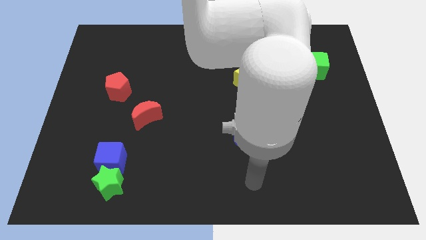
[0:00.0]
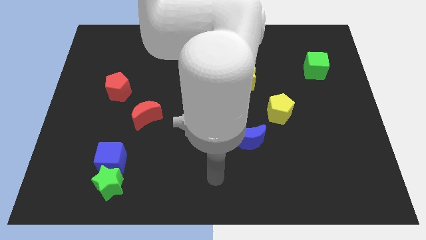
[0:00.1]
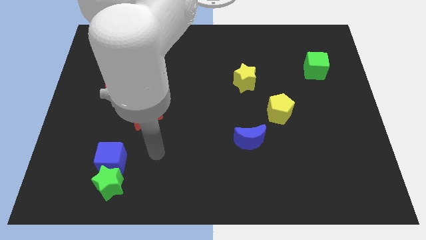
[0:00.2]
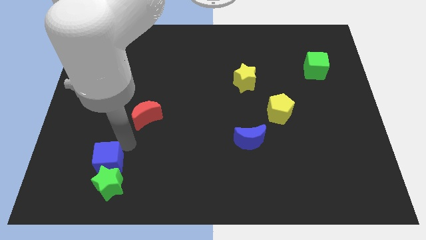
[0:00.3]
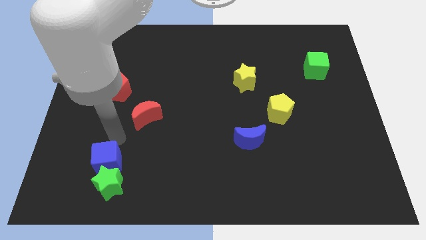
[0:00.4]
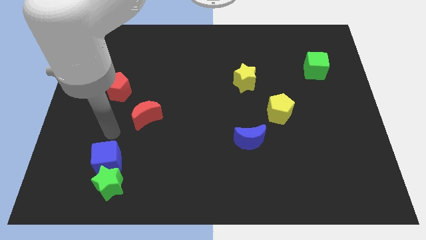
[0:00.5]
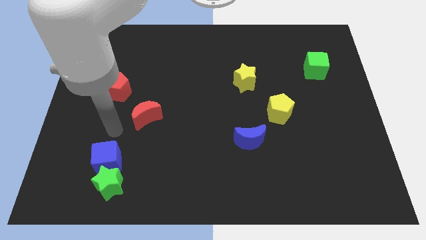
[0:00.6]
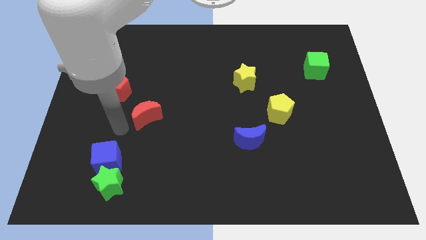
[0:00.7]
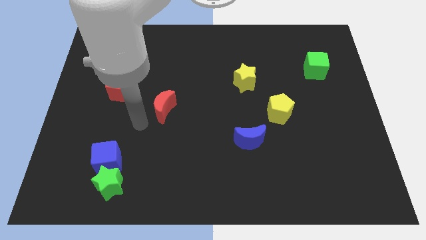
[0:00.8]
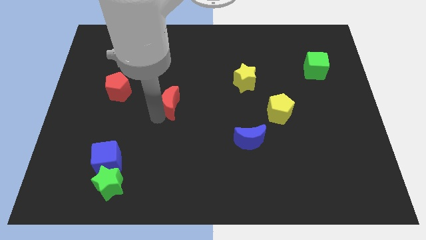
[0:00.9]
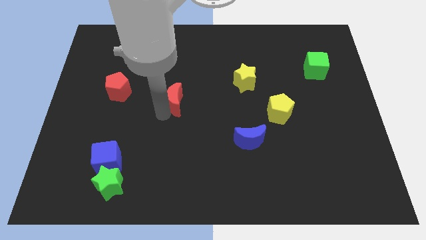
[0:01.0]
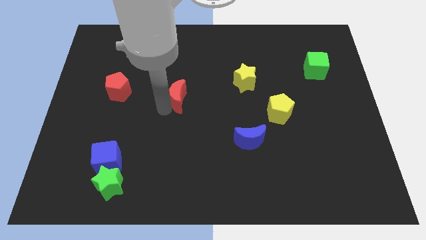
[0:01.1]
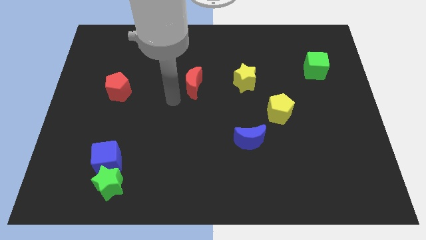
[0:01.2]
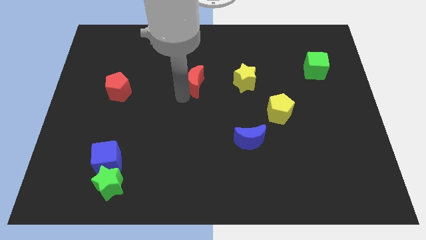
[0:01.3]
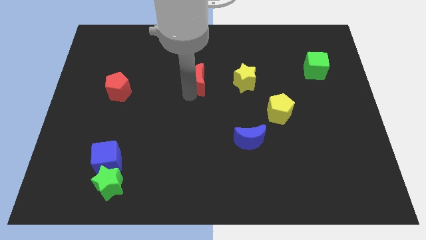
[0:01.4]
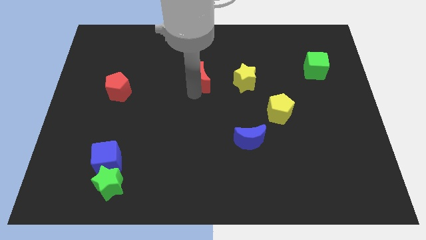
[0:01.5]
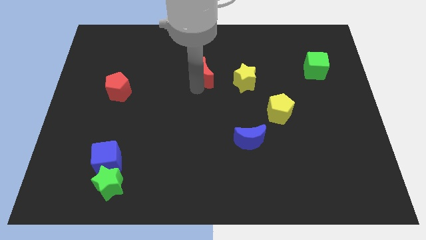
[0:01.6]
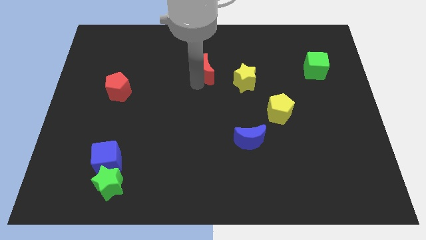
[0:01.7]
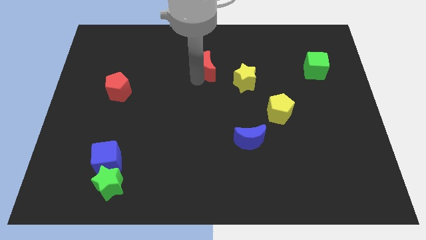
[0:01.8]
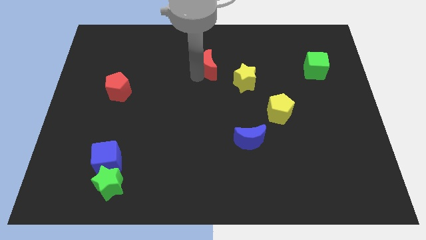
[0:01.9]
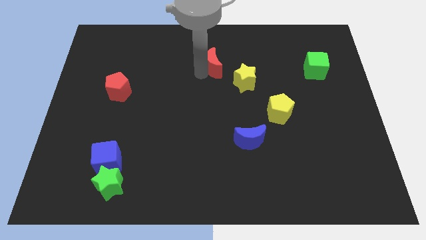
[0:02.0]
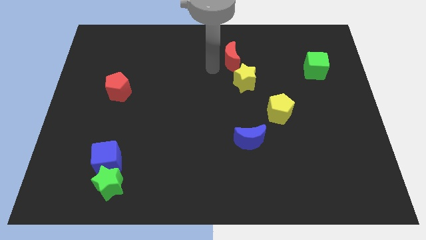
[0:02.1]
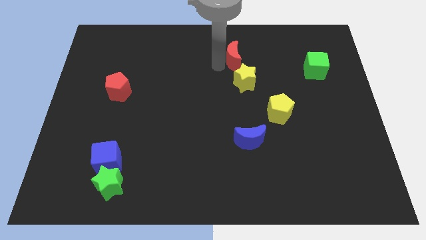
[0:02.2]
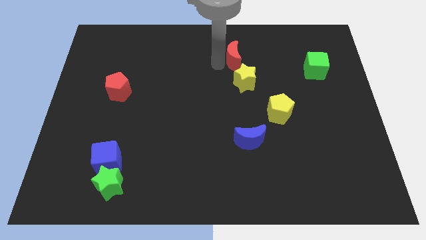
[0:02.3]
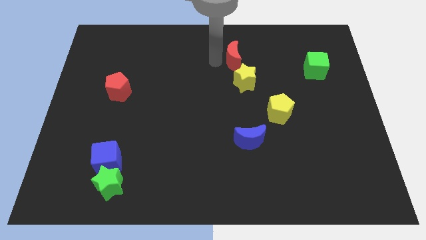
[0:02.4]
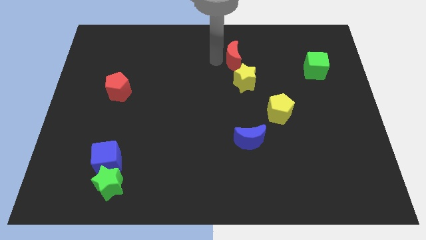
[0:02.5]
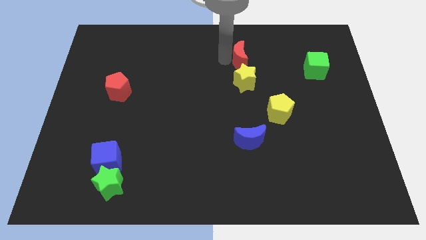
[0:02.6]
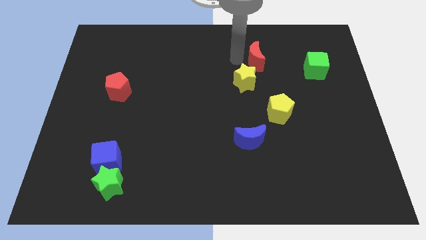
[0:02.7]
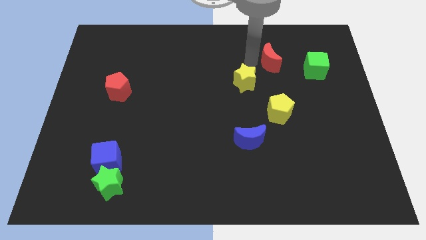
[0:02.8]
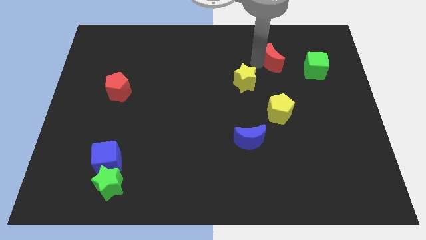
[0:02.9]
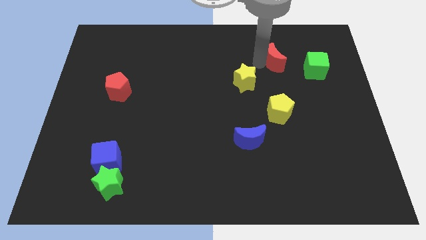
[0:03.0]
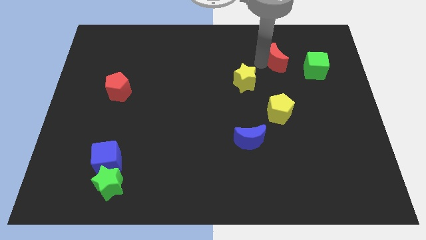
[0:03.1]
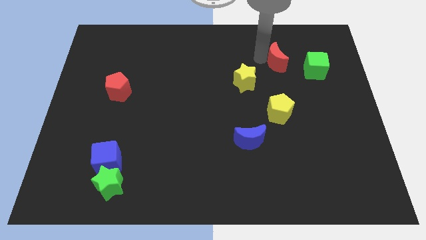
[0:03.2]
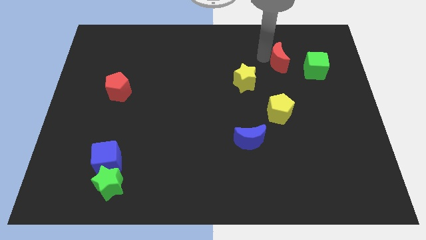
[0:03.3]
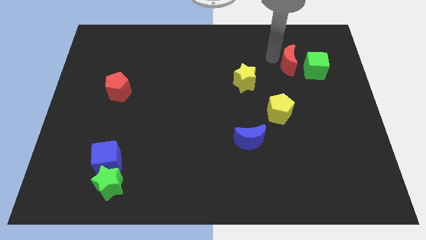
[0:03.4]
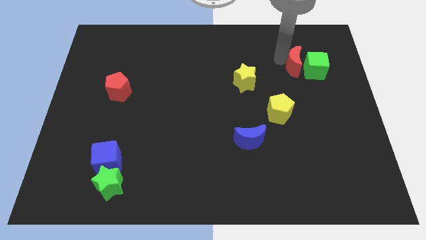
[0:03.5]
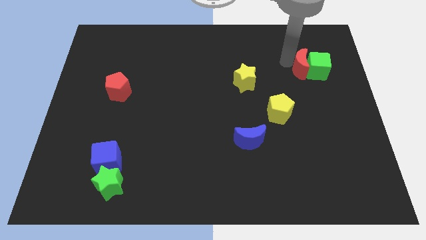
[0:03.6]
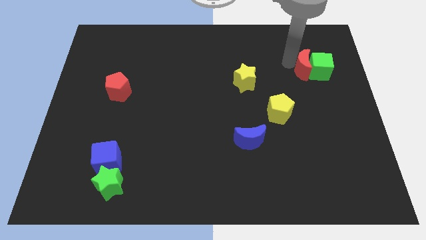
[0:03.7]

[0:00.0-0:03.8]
slide the red moon to the green cube

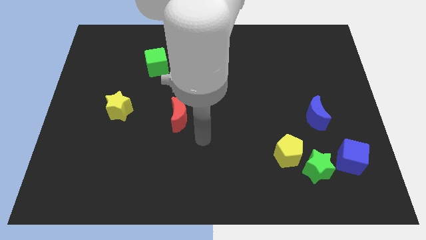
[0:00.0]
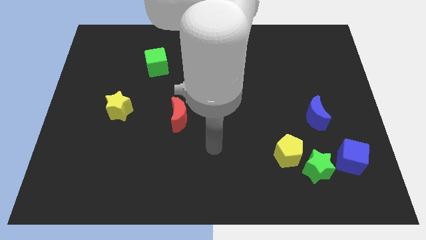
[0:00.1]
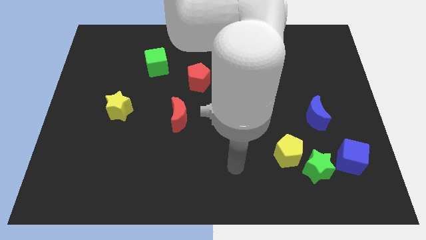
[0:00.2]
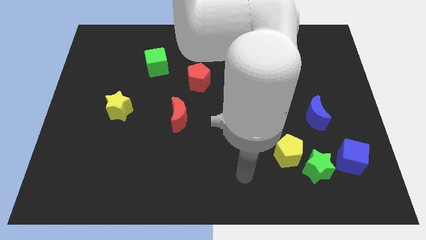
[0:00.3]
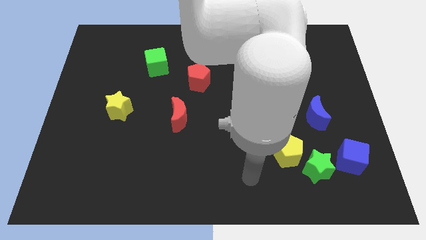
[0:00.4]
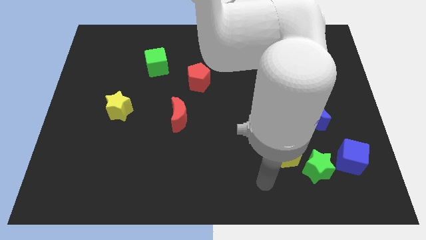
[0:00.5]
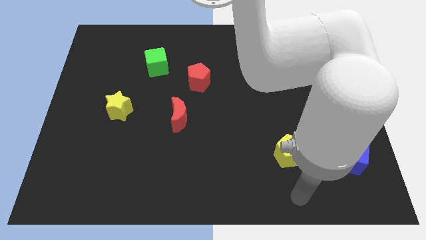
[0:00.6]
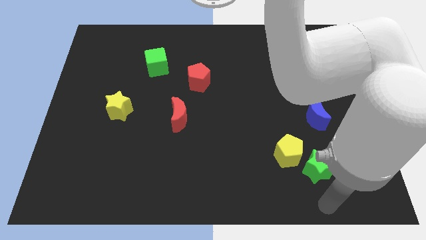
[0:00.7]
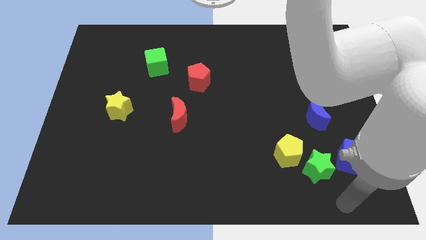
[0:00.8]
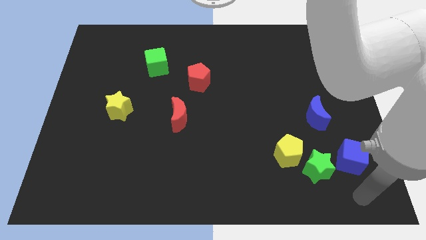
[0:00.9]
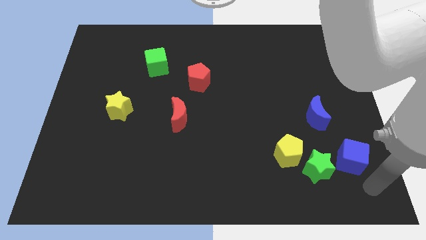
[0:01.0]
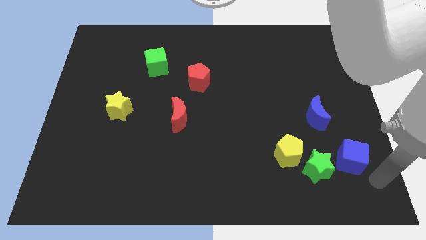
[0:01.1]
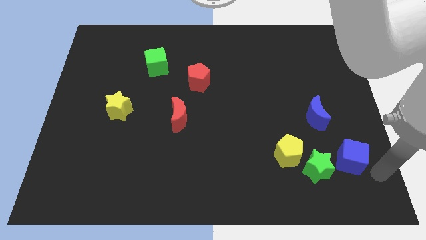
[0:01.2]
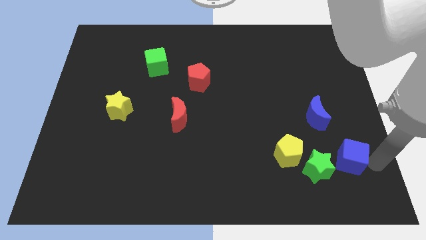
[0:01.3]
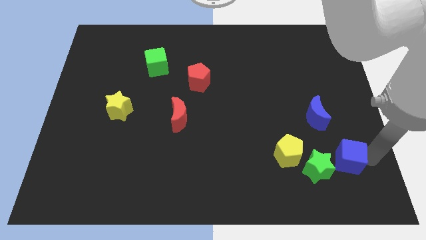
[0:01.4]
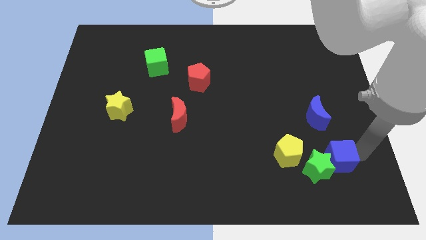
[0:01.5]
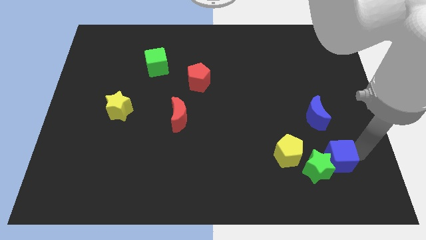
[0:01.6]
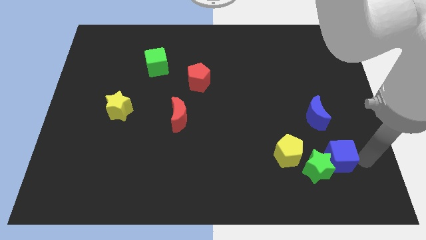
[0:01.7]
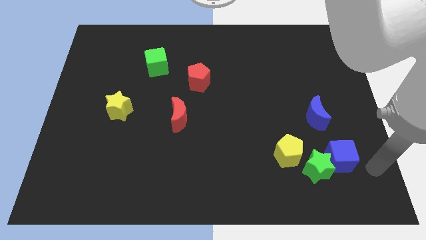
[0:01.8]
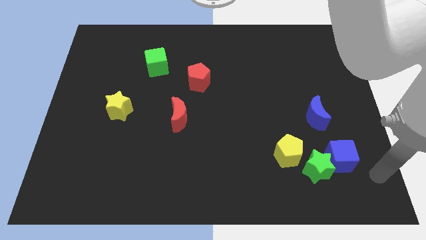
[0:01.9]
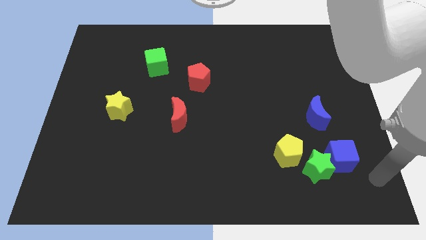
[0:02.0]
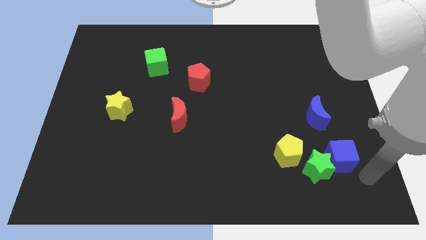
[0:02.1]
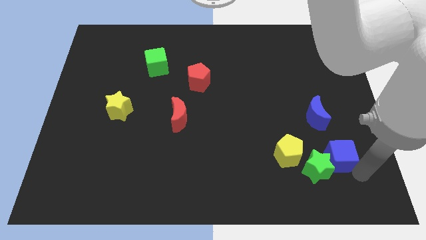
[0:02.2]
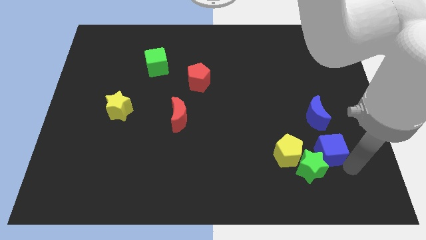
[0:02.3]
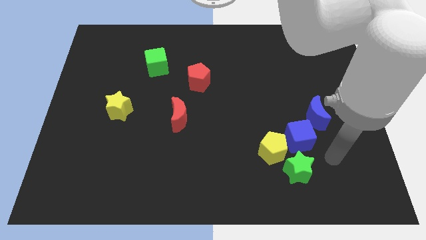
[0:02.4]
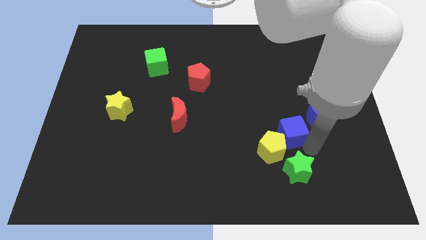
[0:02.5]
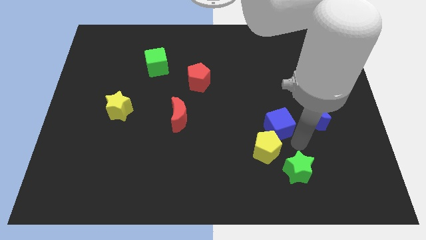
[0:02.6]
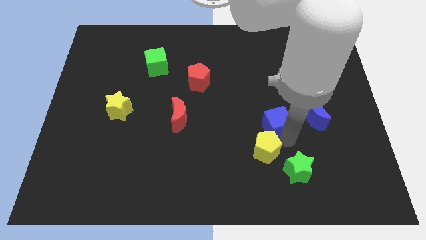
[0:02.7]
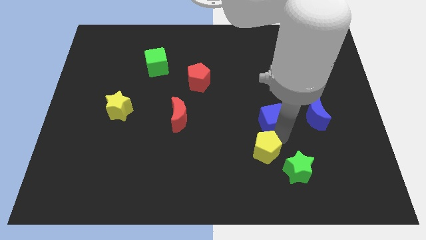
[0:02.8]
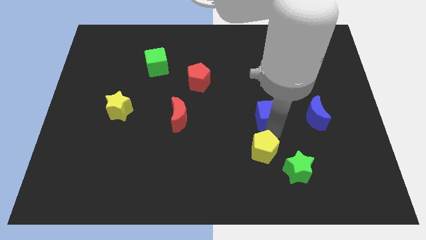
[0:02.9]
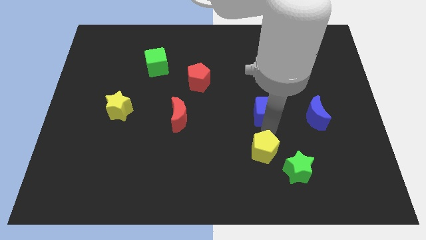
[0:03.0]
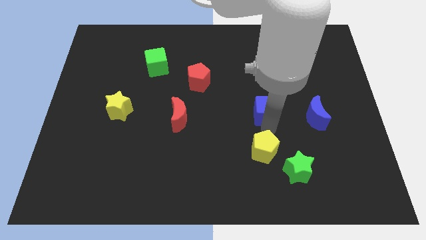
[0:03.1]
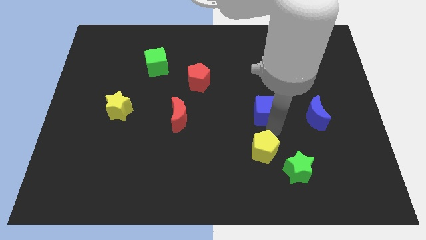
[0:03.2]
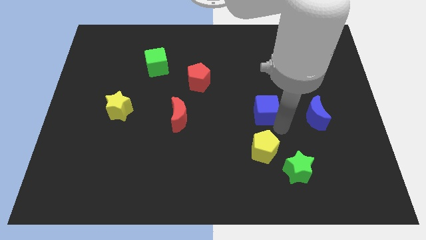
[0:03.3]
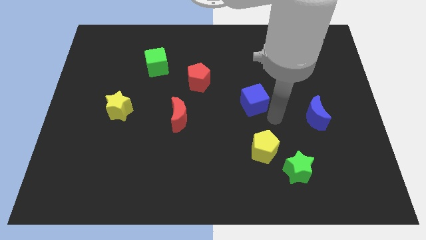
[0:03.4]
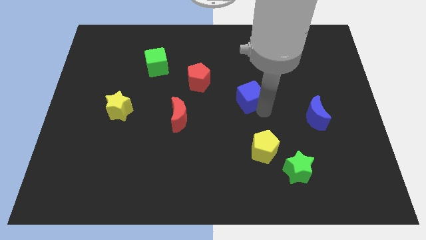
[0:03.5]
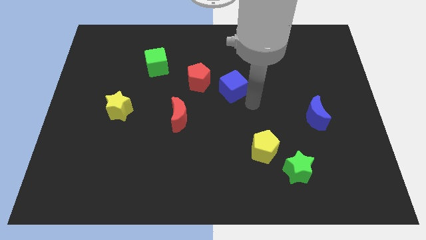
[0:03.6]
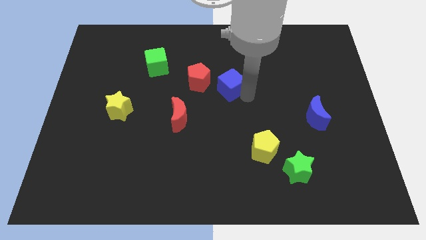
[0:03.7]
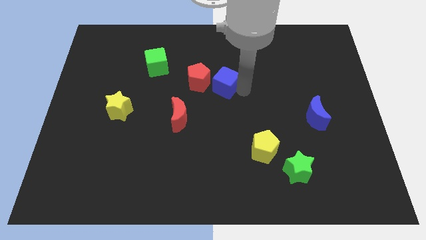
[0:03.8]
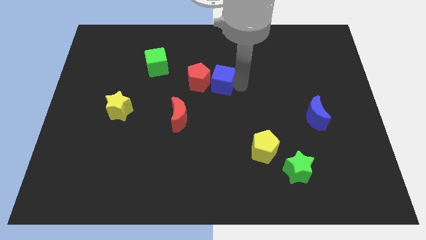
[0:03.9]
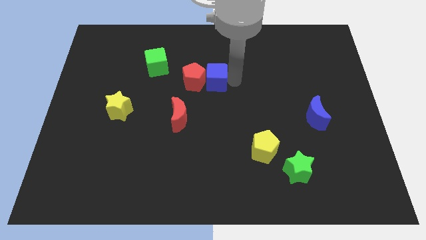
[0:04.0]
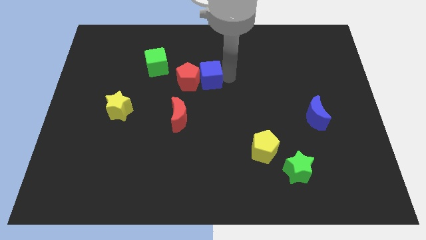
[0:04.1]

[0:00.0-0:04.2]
push the blue cube to the red pentagon

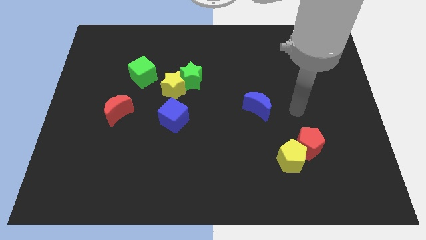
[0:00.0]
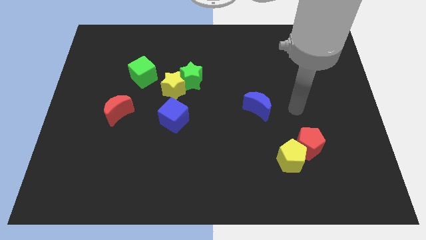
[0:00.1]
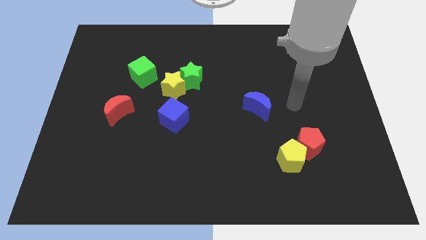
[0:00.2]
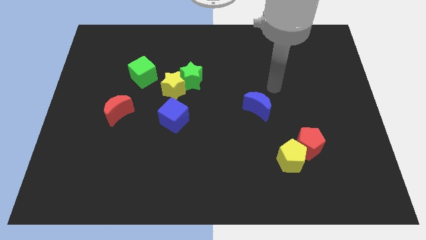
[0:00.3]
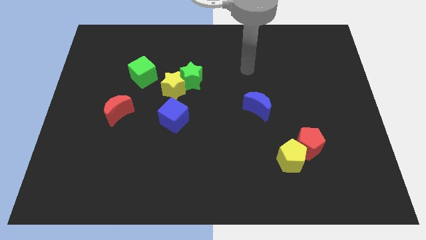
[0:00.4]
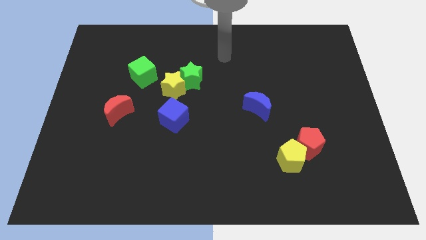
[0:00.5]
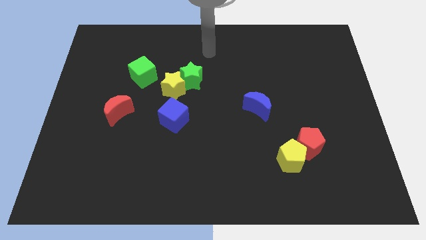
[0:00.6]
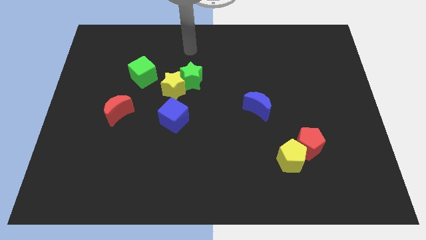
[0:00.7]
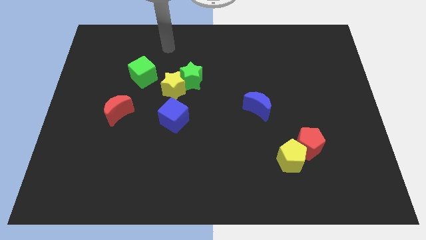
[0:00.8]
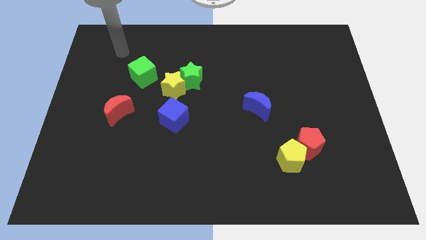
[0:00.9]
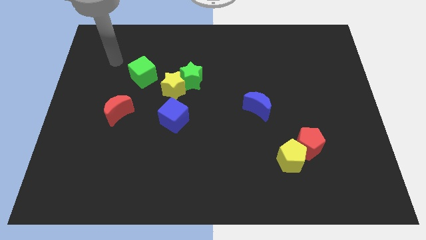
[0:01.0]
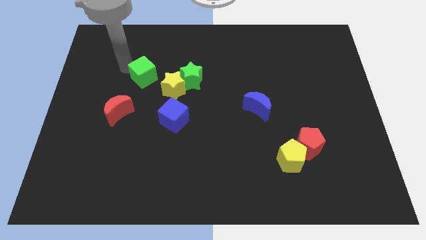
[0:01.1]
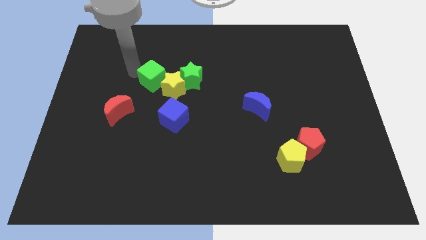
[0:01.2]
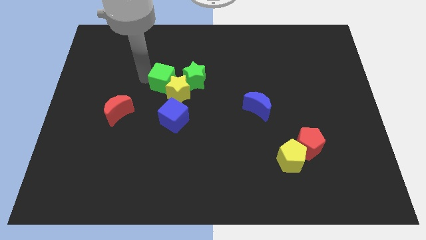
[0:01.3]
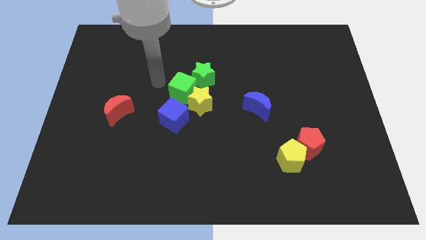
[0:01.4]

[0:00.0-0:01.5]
push the green cube to the yellow star
